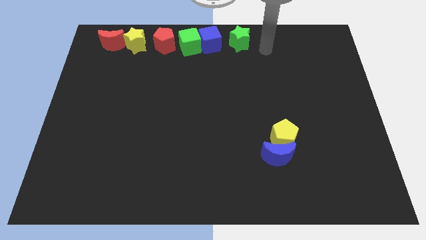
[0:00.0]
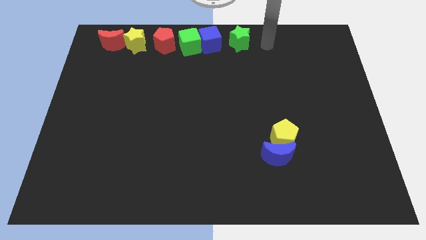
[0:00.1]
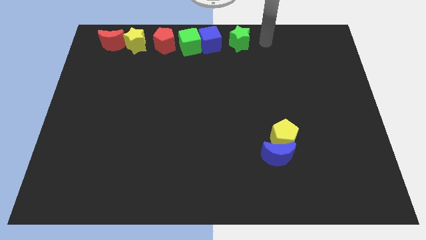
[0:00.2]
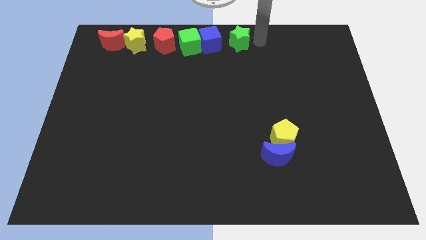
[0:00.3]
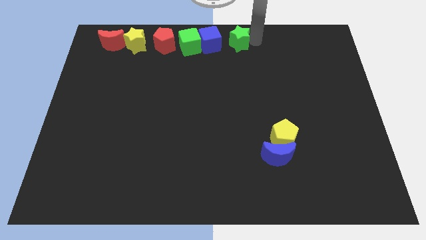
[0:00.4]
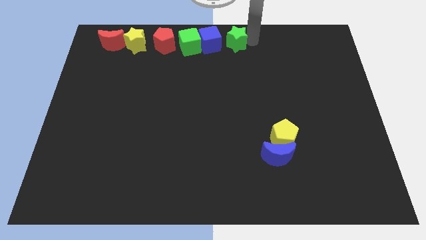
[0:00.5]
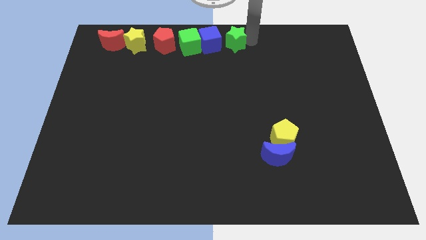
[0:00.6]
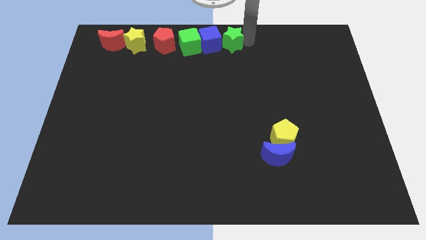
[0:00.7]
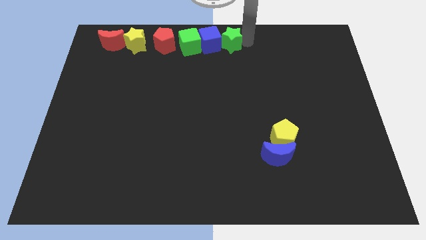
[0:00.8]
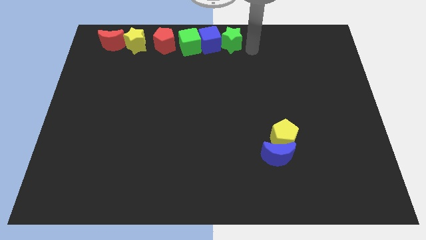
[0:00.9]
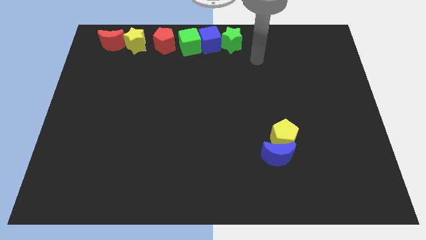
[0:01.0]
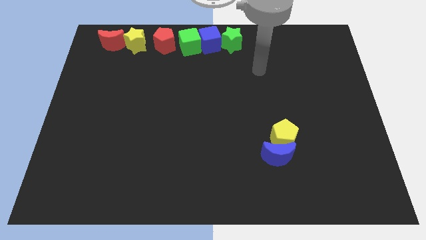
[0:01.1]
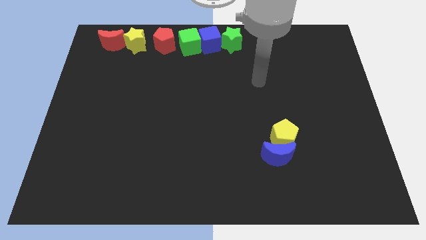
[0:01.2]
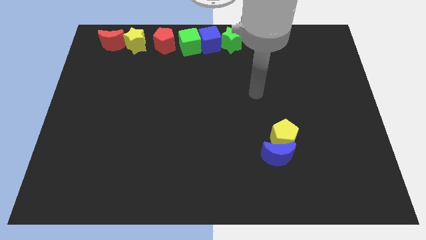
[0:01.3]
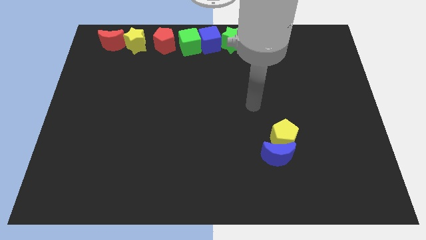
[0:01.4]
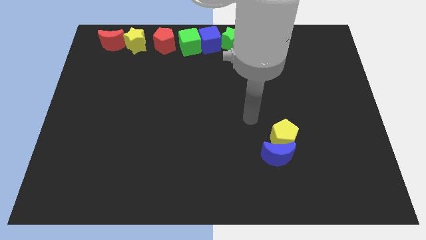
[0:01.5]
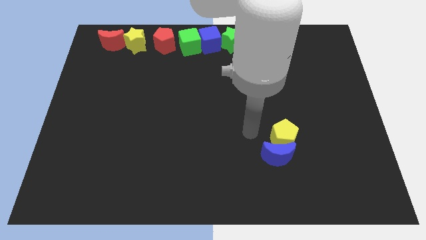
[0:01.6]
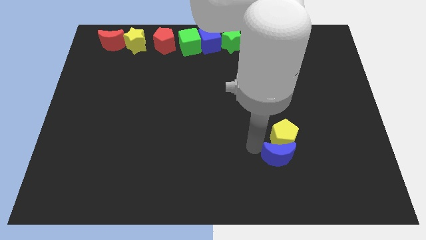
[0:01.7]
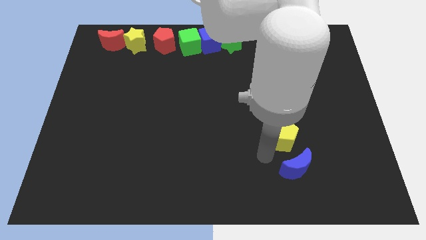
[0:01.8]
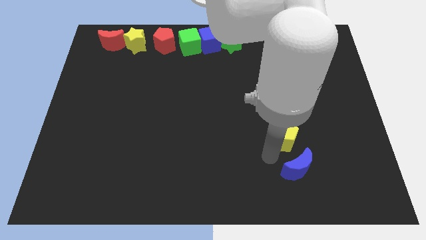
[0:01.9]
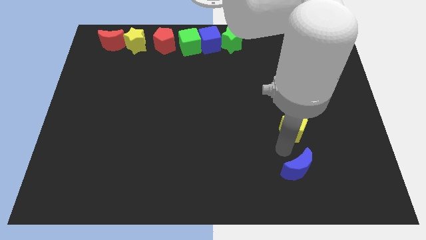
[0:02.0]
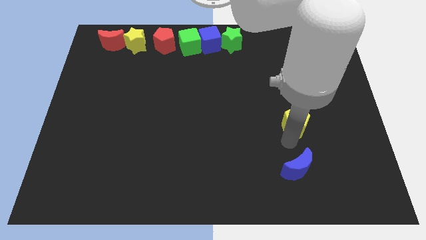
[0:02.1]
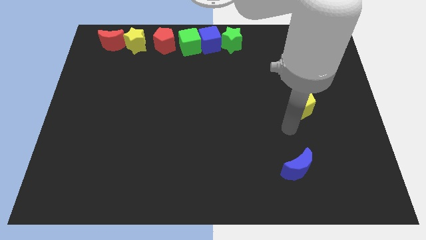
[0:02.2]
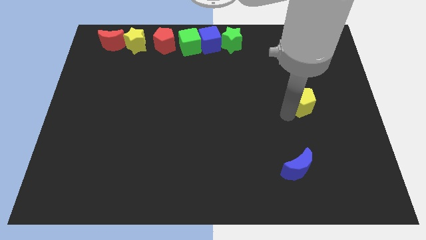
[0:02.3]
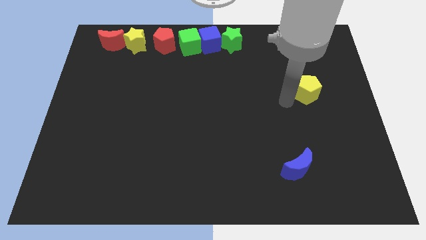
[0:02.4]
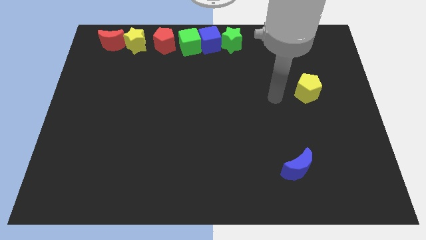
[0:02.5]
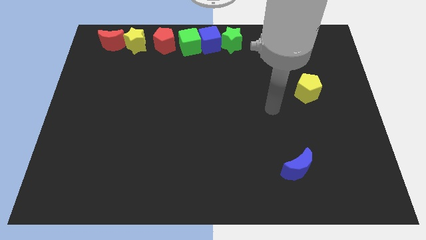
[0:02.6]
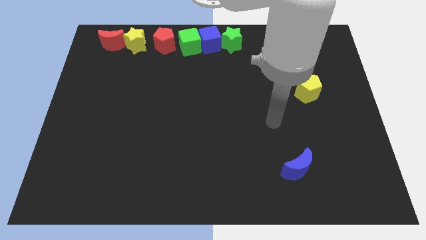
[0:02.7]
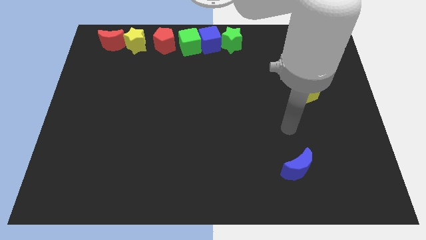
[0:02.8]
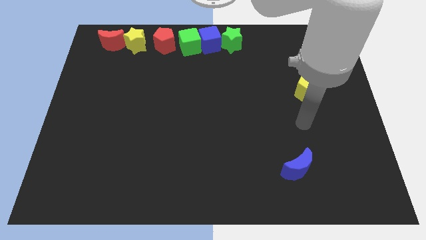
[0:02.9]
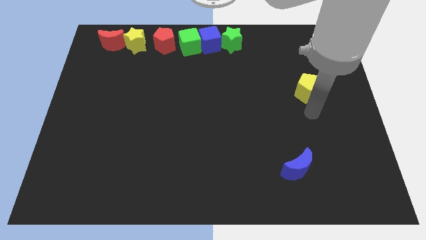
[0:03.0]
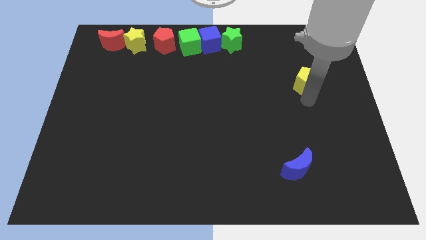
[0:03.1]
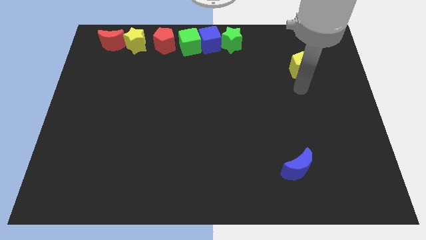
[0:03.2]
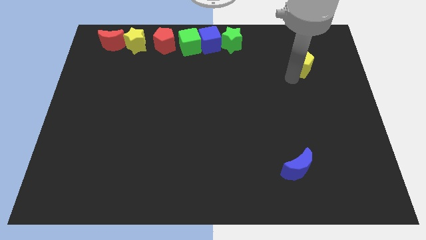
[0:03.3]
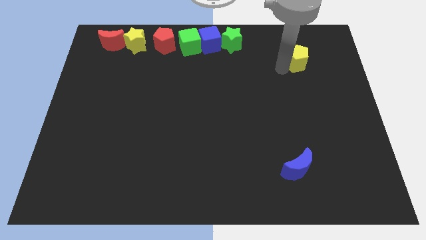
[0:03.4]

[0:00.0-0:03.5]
move yellow pentagon towards the top

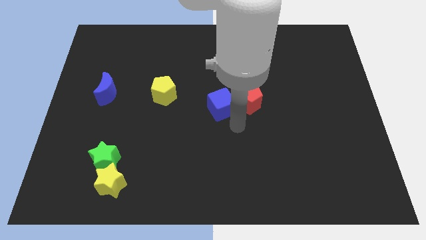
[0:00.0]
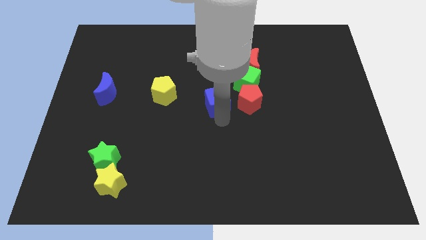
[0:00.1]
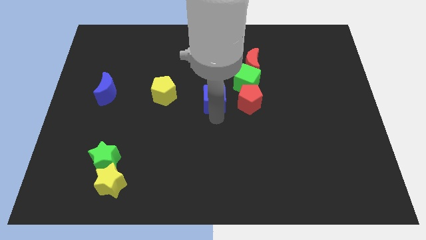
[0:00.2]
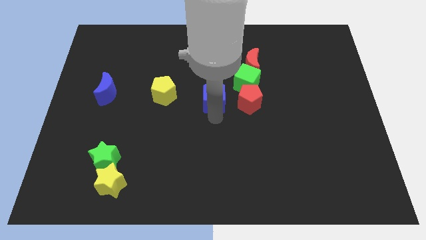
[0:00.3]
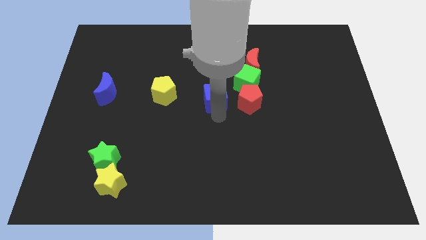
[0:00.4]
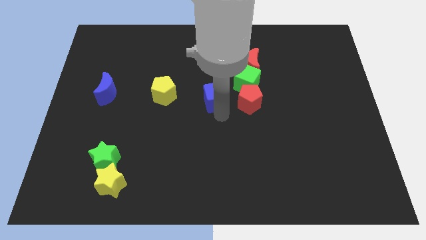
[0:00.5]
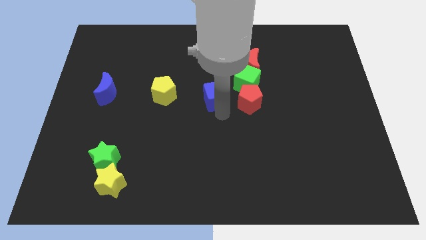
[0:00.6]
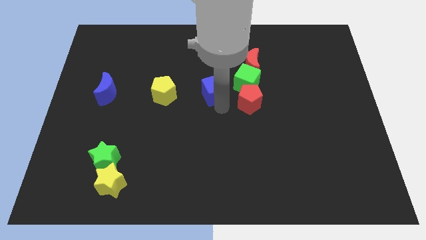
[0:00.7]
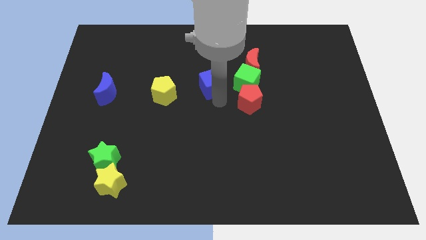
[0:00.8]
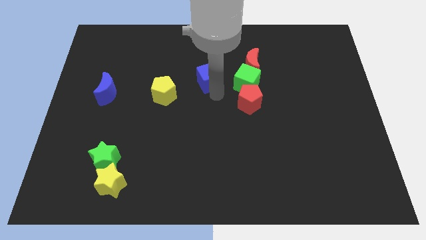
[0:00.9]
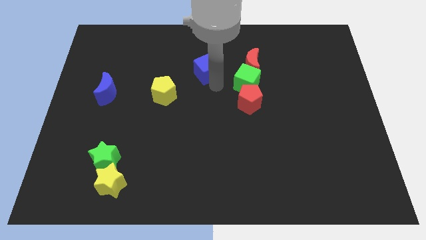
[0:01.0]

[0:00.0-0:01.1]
separate blue cube from red pentagon

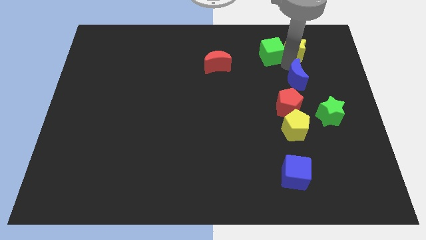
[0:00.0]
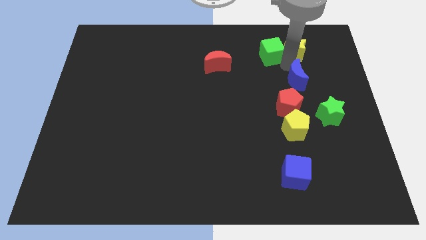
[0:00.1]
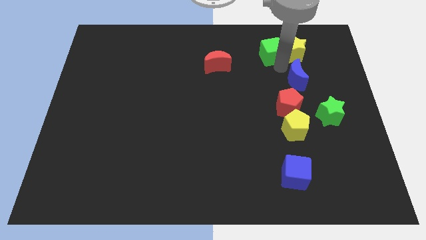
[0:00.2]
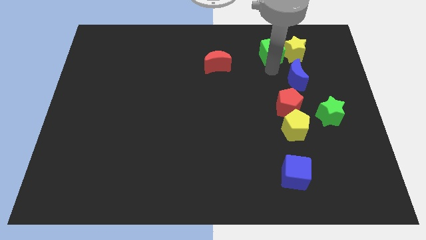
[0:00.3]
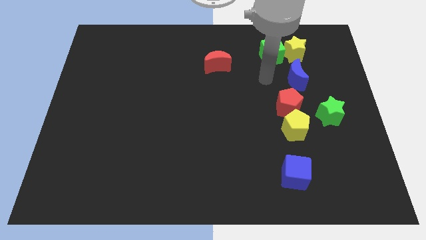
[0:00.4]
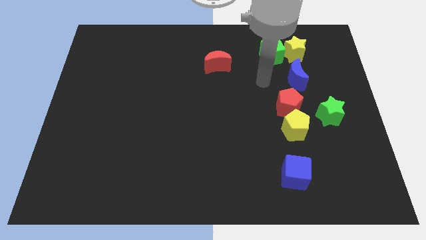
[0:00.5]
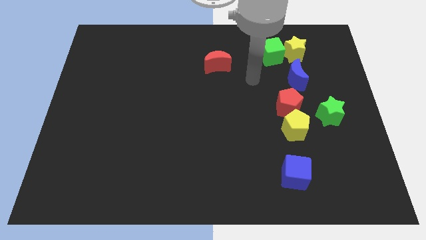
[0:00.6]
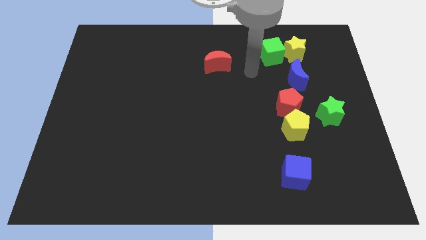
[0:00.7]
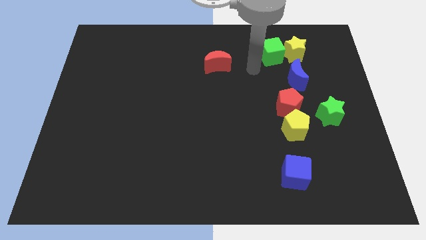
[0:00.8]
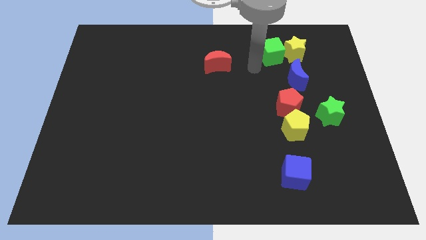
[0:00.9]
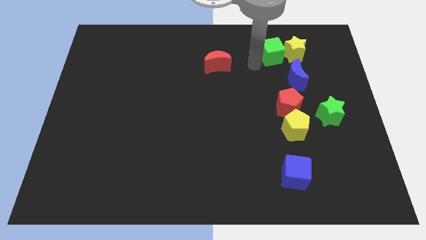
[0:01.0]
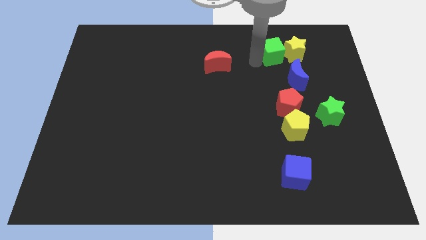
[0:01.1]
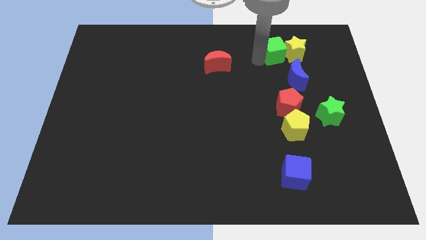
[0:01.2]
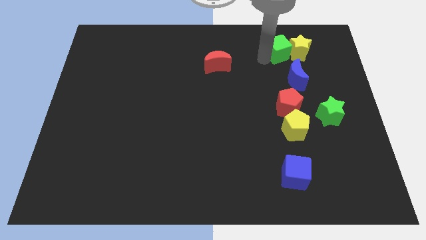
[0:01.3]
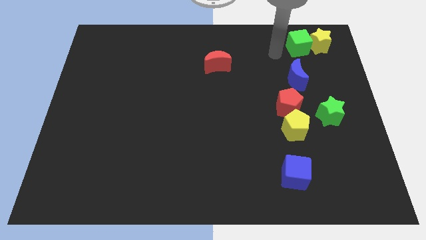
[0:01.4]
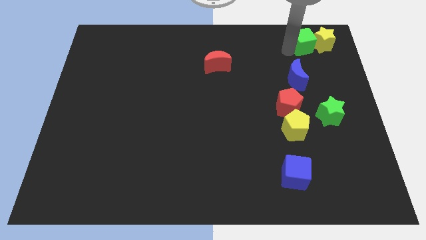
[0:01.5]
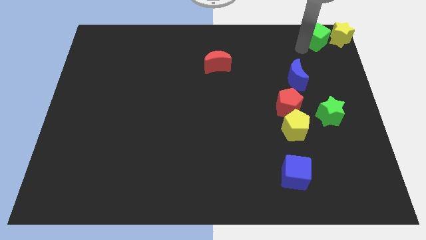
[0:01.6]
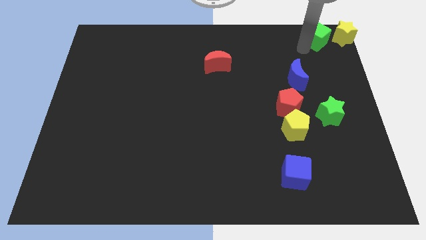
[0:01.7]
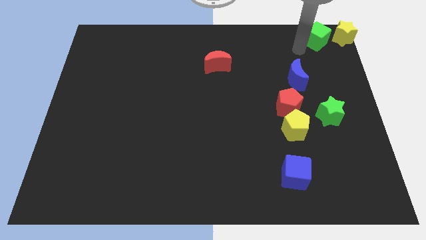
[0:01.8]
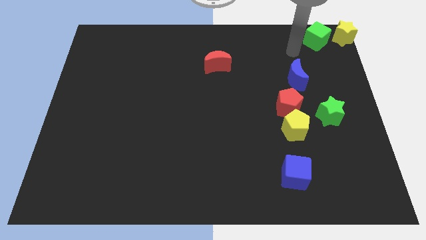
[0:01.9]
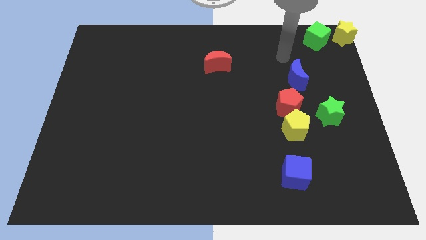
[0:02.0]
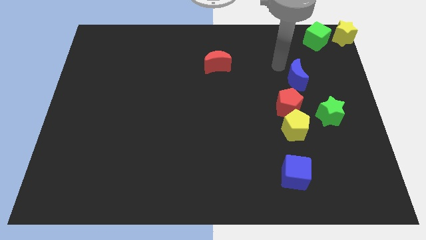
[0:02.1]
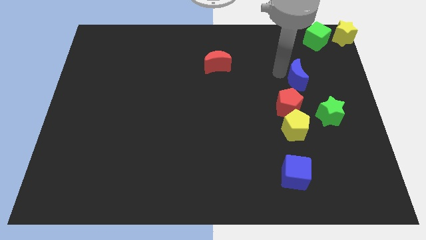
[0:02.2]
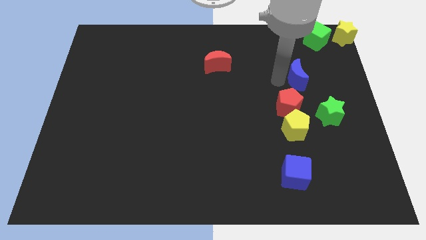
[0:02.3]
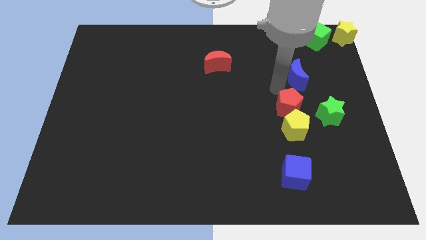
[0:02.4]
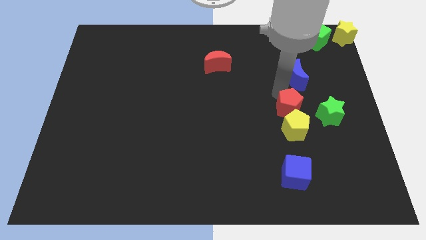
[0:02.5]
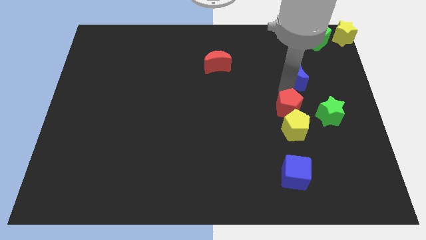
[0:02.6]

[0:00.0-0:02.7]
push the yellow star with the green cube to the top right corner of the board

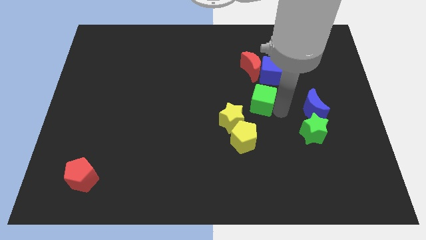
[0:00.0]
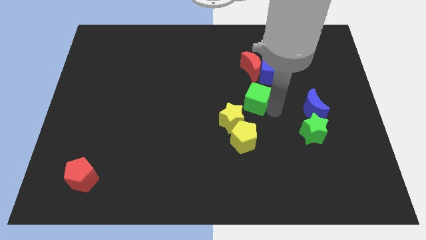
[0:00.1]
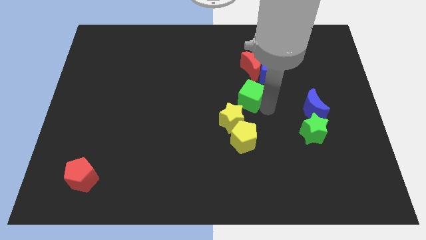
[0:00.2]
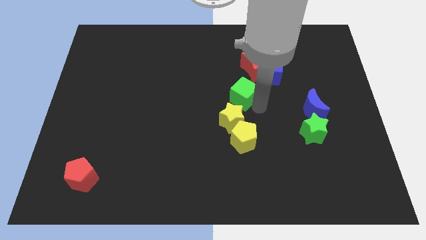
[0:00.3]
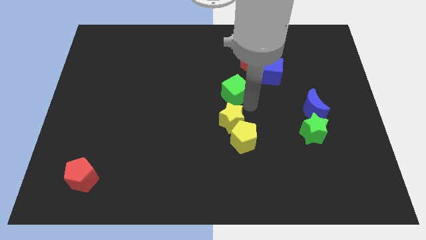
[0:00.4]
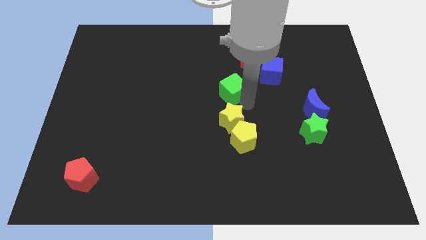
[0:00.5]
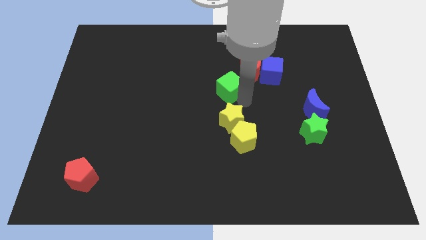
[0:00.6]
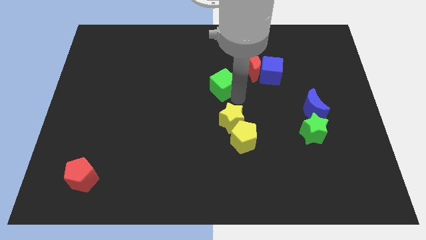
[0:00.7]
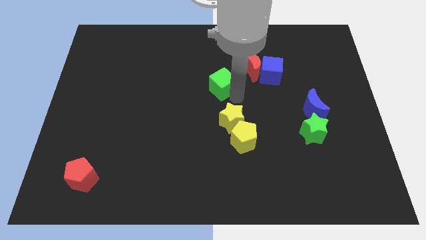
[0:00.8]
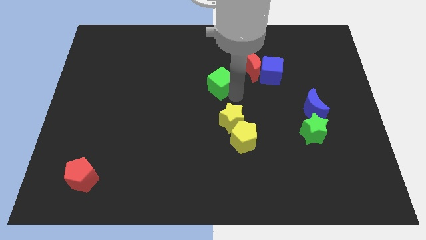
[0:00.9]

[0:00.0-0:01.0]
push green cube diagonally right above yellow star

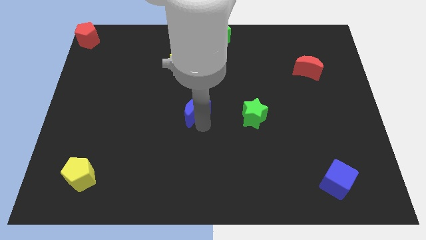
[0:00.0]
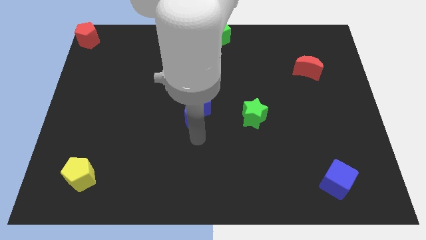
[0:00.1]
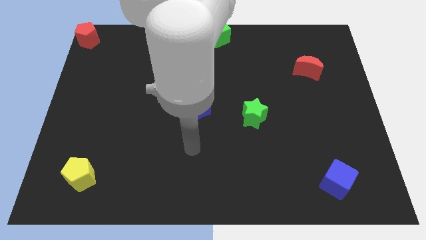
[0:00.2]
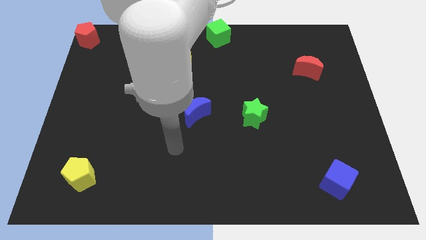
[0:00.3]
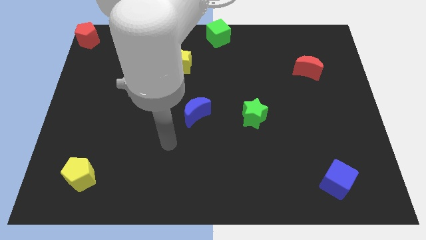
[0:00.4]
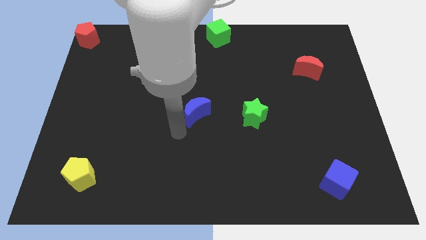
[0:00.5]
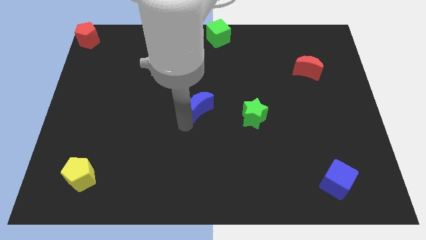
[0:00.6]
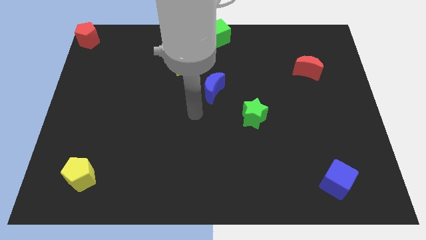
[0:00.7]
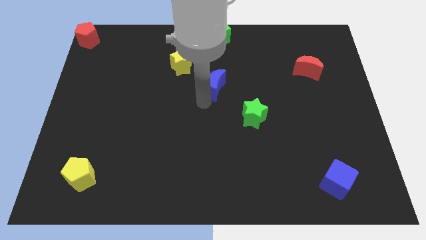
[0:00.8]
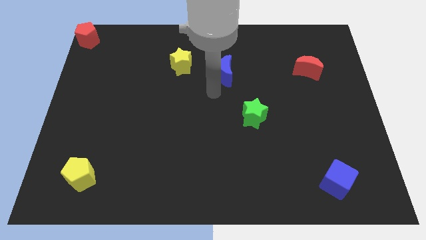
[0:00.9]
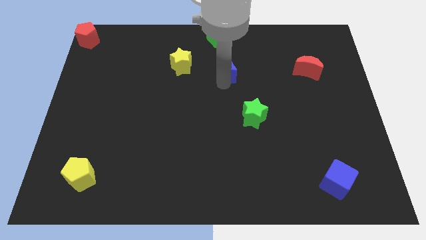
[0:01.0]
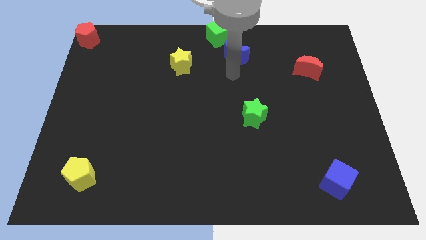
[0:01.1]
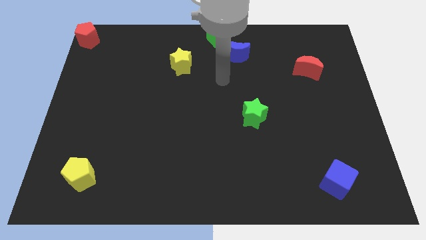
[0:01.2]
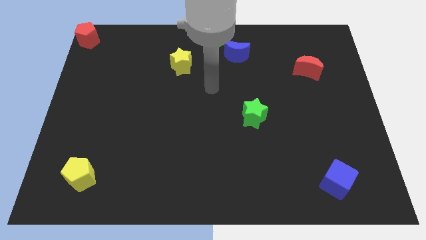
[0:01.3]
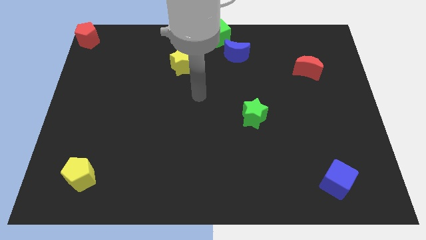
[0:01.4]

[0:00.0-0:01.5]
place the blue moon to the bottom right of the green cube
